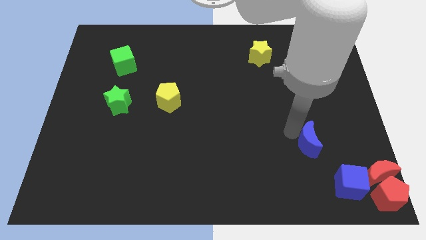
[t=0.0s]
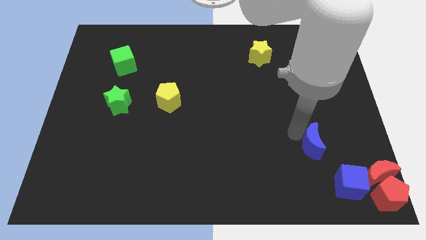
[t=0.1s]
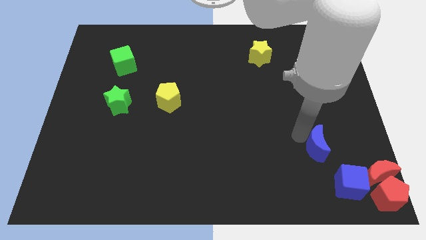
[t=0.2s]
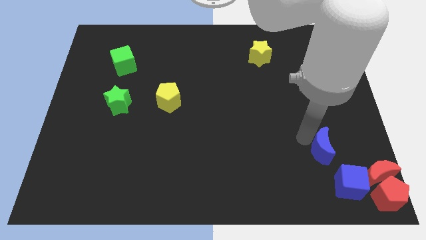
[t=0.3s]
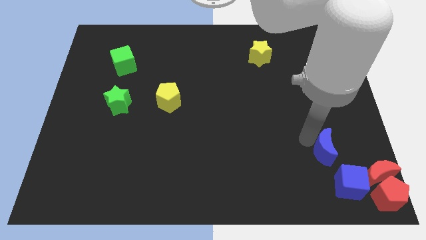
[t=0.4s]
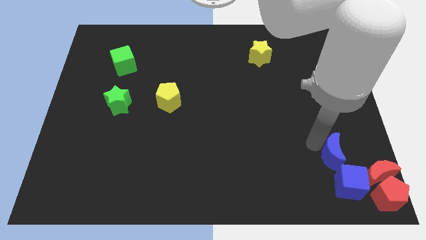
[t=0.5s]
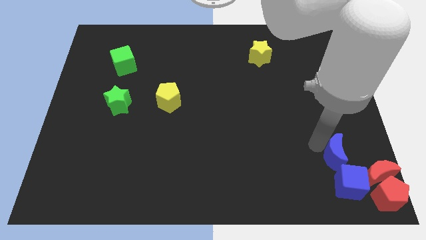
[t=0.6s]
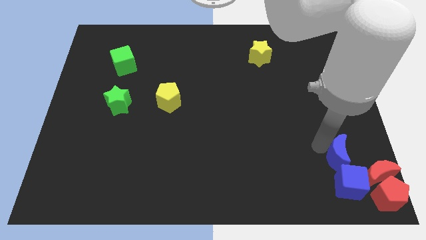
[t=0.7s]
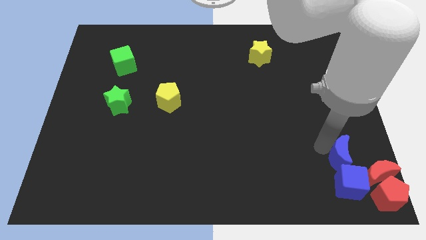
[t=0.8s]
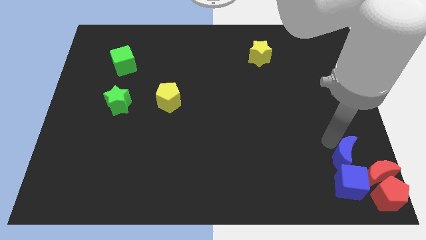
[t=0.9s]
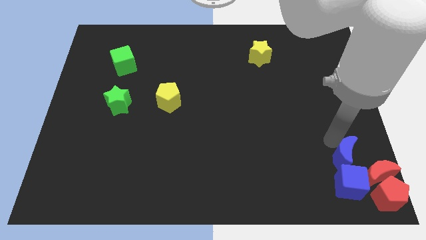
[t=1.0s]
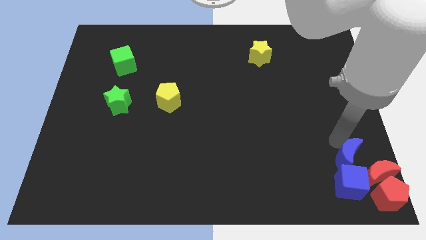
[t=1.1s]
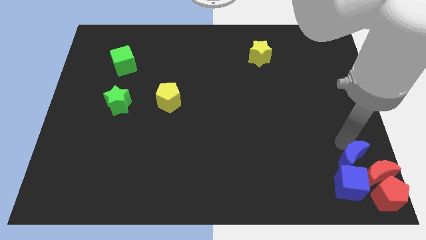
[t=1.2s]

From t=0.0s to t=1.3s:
place the blue crescent above the blue cube

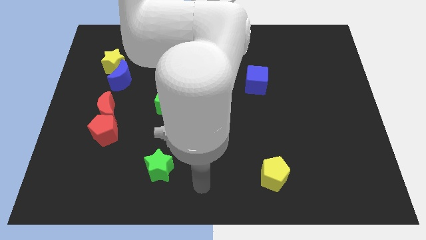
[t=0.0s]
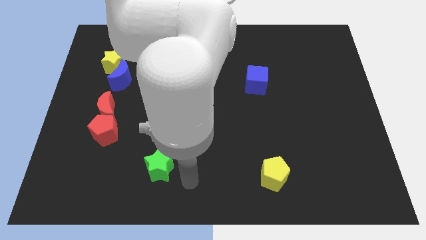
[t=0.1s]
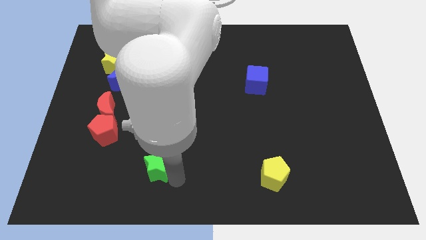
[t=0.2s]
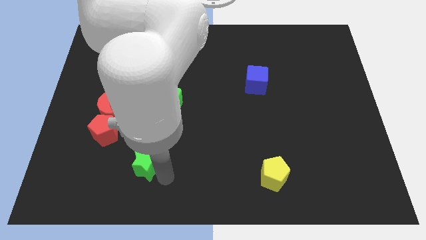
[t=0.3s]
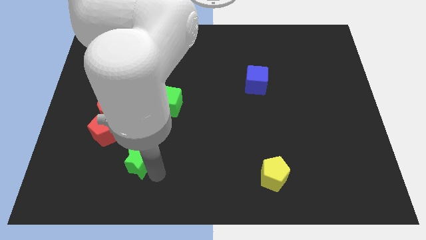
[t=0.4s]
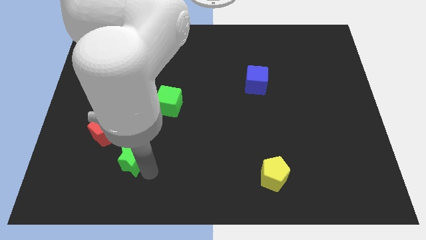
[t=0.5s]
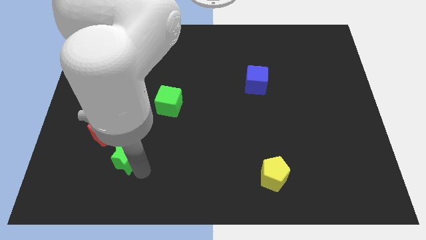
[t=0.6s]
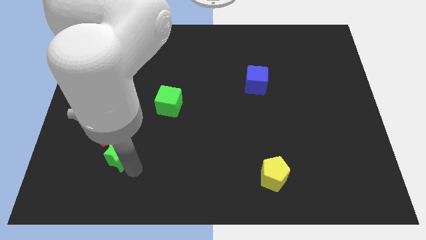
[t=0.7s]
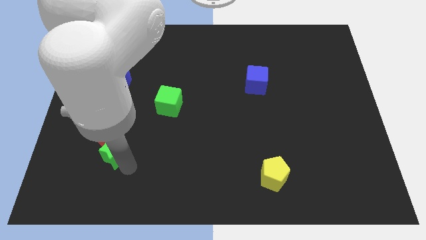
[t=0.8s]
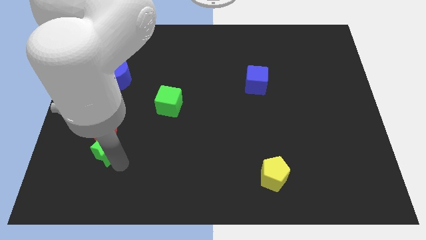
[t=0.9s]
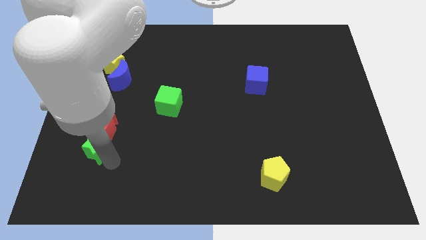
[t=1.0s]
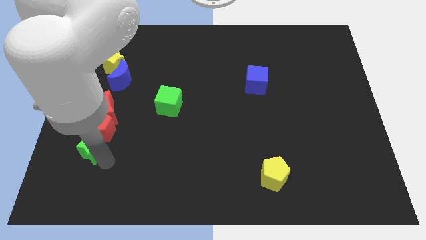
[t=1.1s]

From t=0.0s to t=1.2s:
push the green star to the bottom of the red pentagon

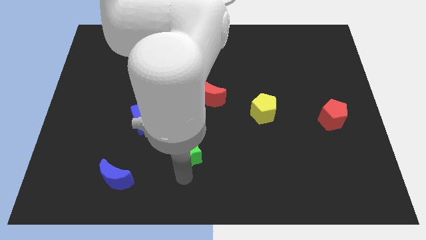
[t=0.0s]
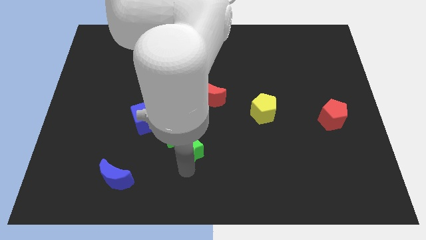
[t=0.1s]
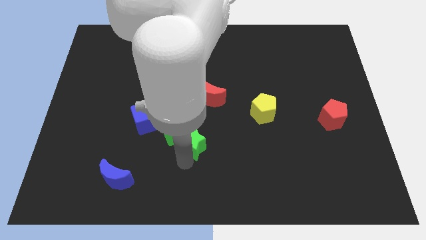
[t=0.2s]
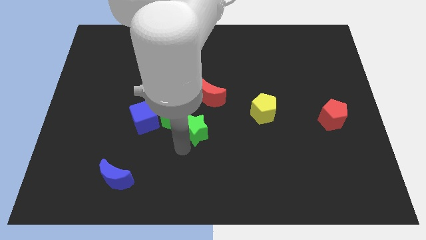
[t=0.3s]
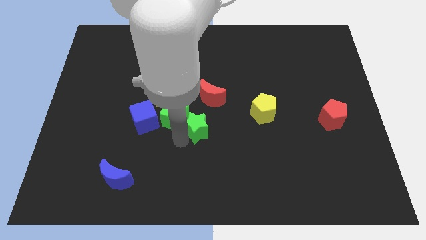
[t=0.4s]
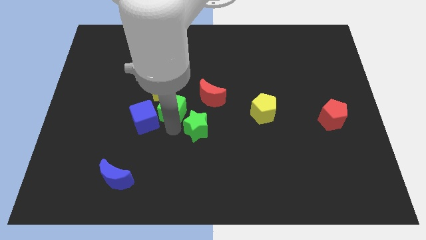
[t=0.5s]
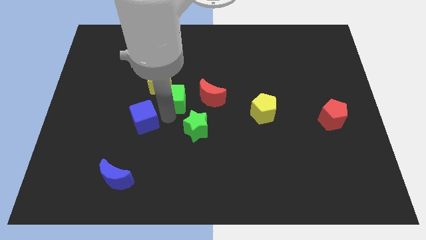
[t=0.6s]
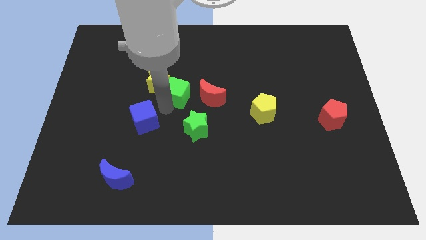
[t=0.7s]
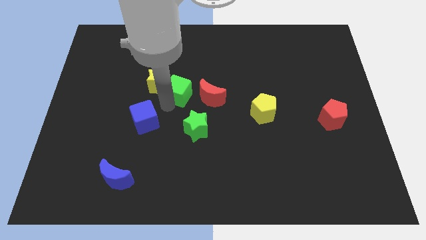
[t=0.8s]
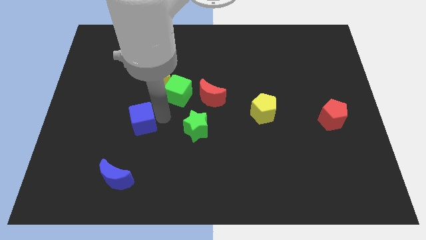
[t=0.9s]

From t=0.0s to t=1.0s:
move the green cube into the yellow star

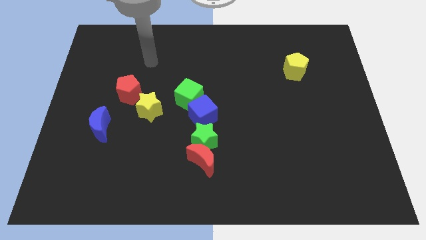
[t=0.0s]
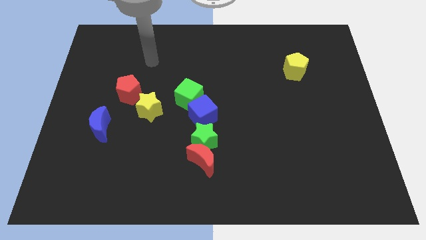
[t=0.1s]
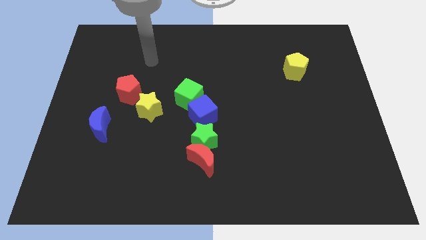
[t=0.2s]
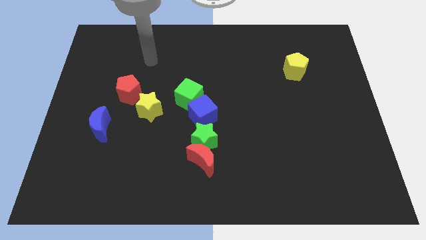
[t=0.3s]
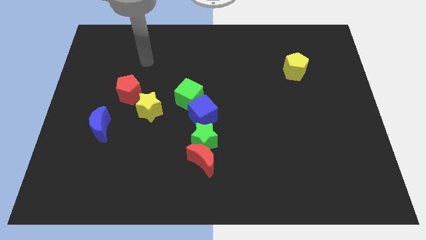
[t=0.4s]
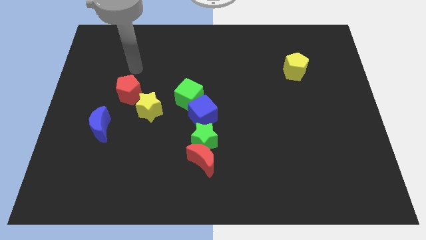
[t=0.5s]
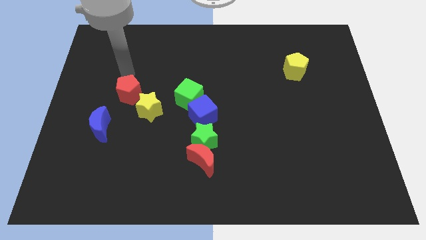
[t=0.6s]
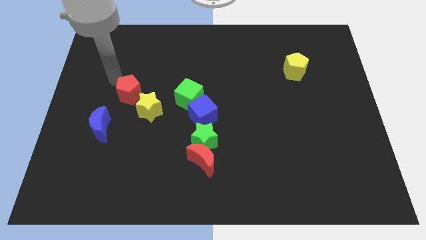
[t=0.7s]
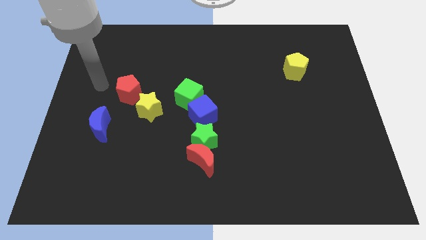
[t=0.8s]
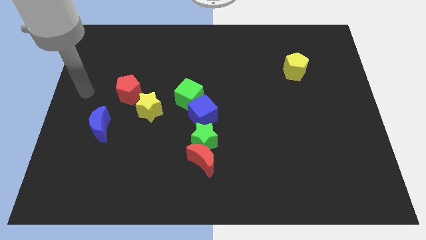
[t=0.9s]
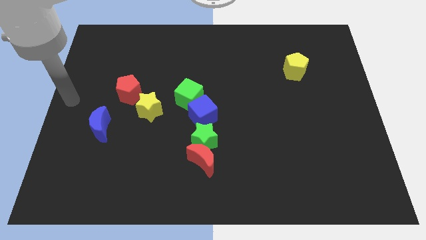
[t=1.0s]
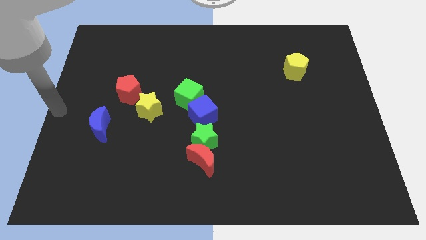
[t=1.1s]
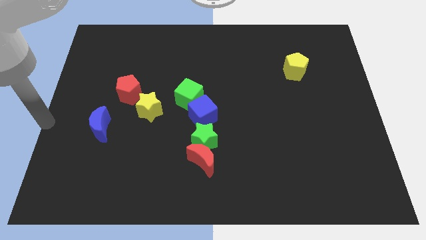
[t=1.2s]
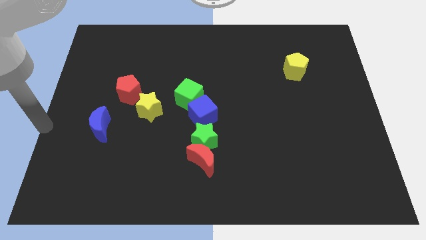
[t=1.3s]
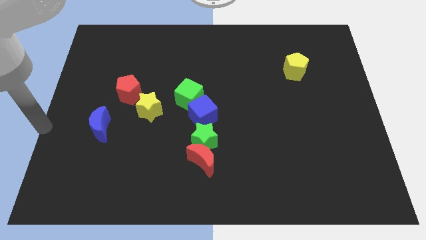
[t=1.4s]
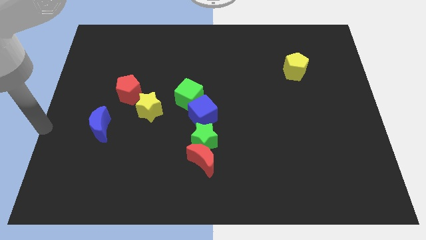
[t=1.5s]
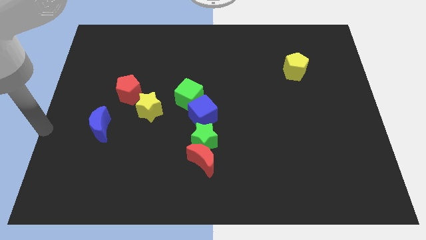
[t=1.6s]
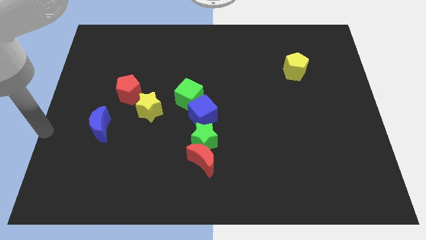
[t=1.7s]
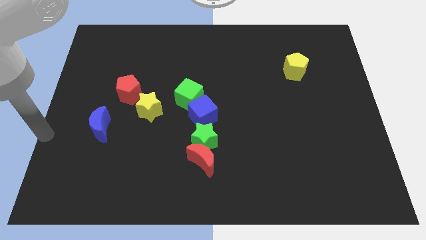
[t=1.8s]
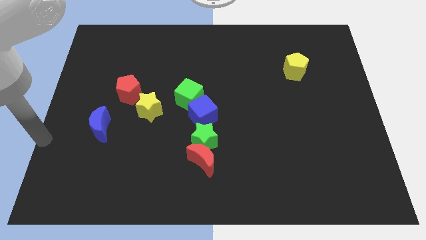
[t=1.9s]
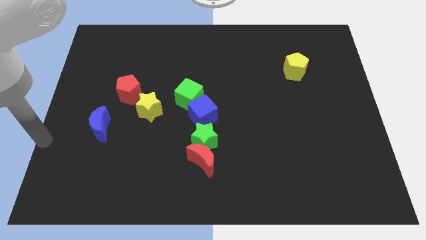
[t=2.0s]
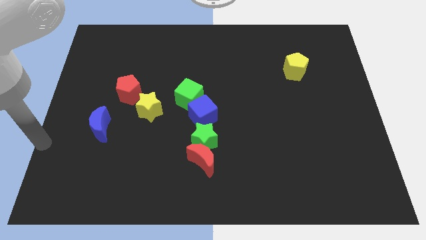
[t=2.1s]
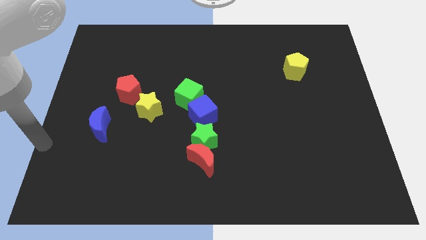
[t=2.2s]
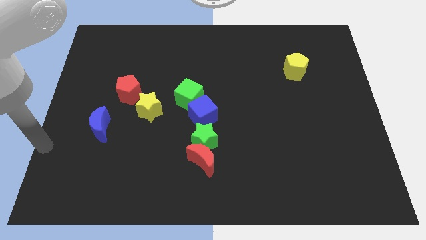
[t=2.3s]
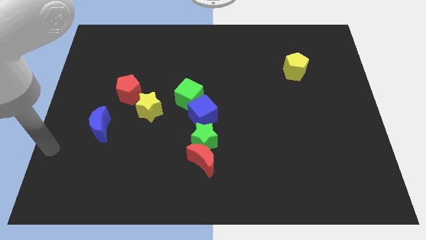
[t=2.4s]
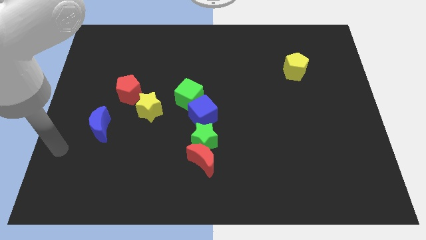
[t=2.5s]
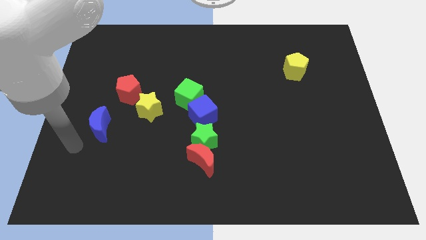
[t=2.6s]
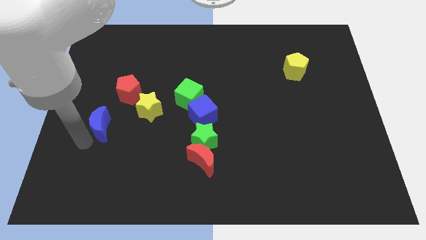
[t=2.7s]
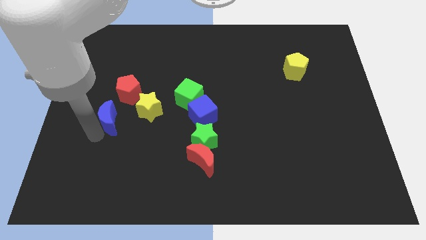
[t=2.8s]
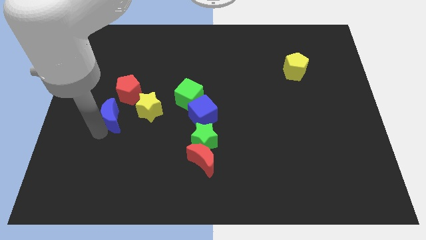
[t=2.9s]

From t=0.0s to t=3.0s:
touch the blue moon

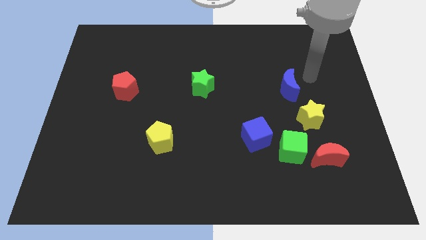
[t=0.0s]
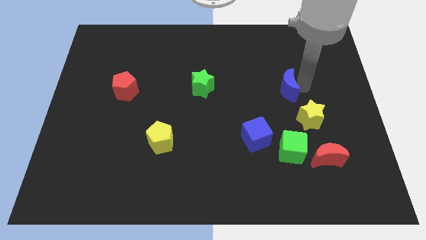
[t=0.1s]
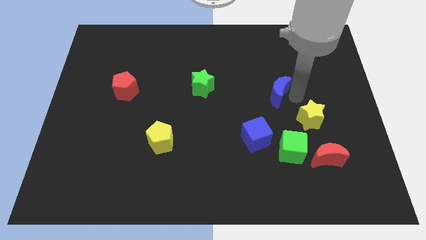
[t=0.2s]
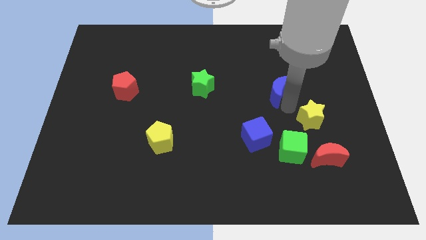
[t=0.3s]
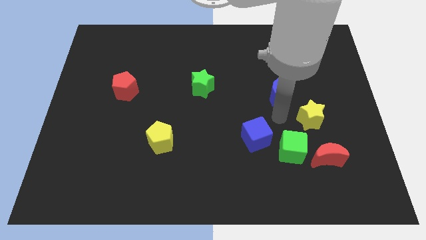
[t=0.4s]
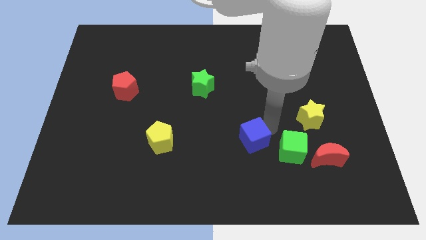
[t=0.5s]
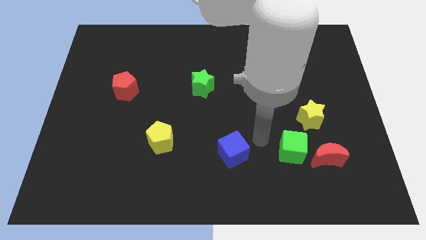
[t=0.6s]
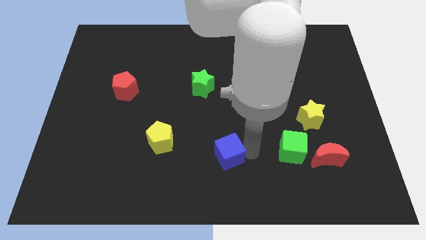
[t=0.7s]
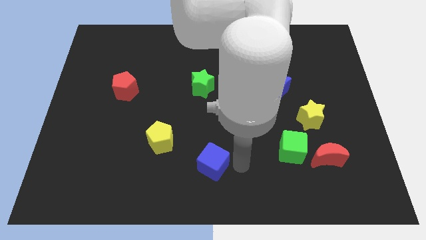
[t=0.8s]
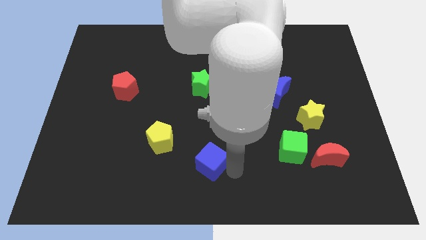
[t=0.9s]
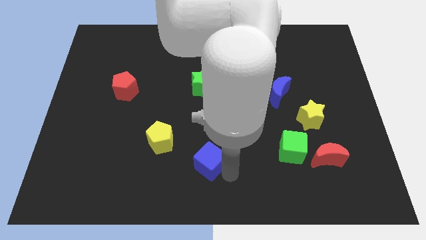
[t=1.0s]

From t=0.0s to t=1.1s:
push blue cube to bottom center

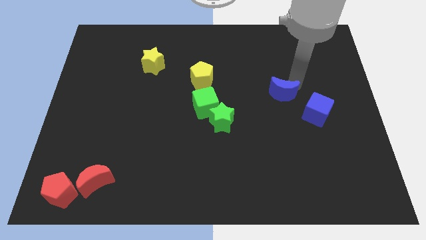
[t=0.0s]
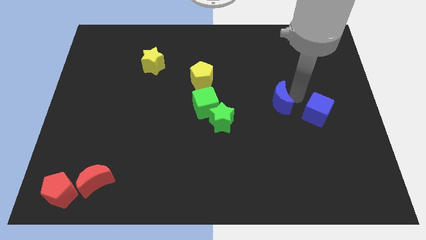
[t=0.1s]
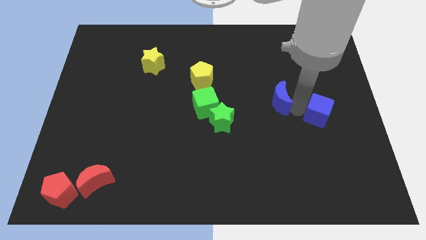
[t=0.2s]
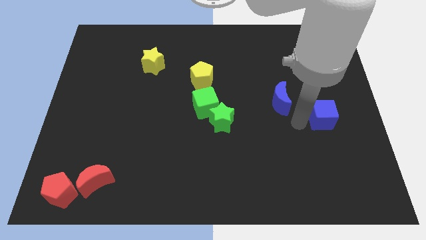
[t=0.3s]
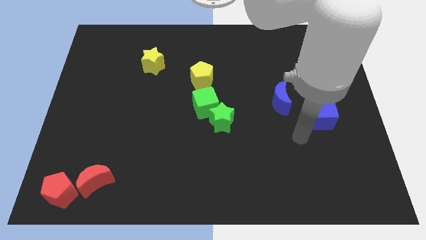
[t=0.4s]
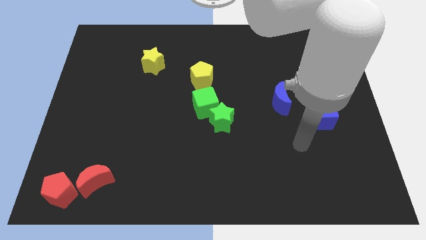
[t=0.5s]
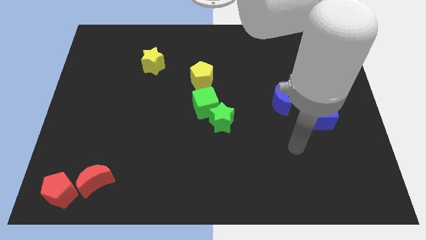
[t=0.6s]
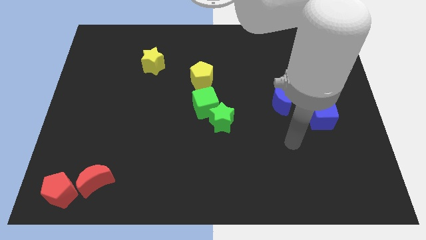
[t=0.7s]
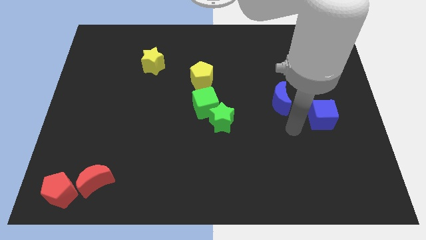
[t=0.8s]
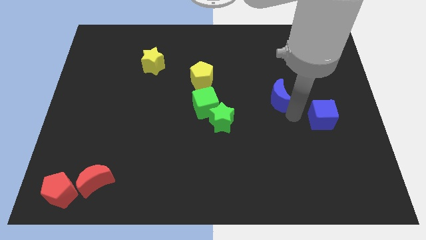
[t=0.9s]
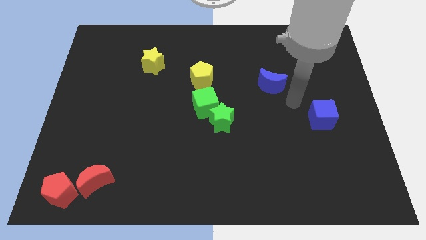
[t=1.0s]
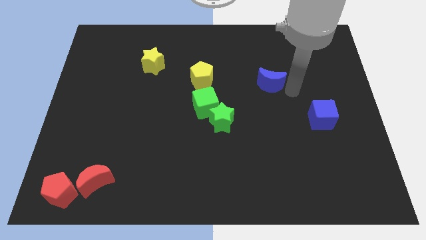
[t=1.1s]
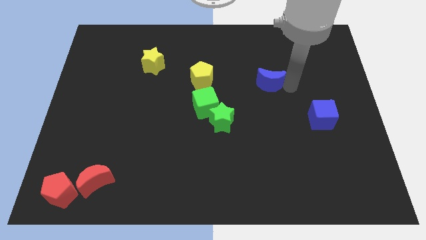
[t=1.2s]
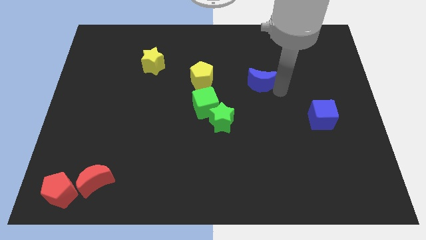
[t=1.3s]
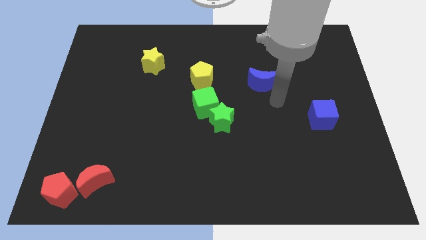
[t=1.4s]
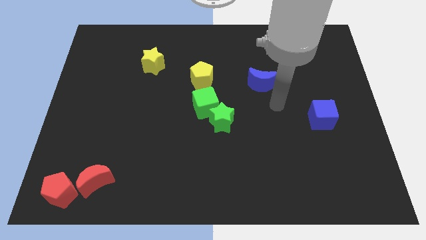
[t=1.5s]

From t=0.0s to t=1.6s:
place the blue crescent horizontally at the right side of the yellow pentagon
